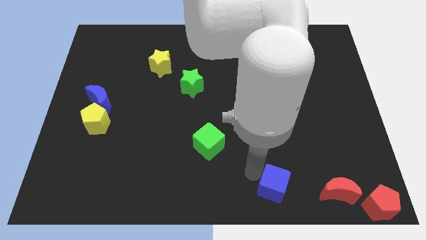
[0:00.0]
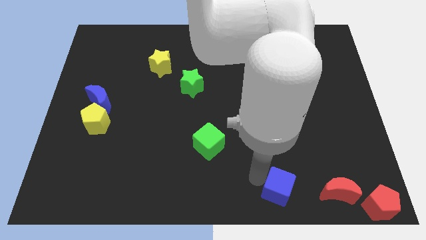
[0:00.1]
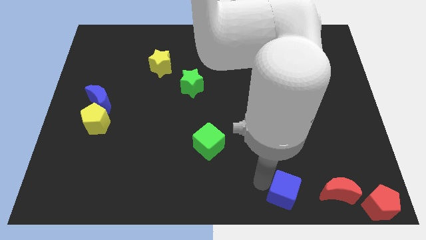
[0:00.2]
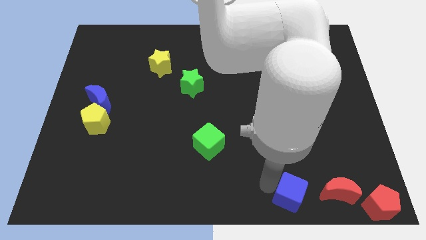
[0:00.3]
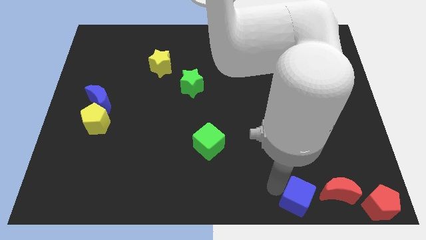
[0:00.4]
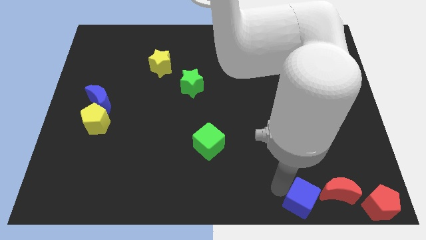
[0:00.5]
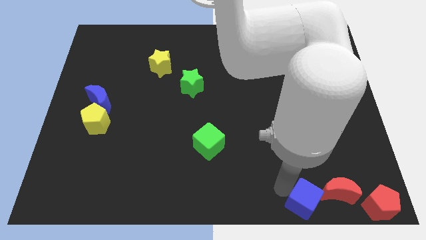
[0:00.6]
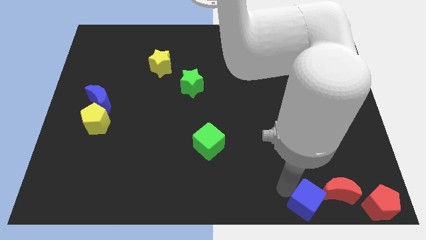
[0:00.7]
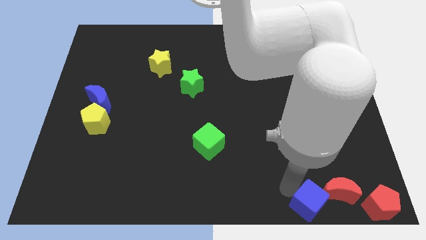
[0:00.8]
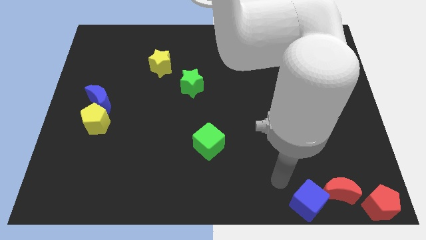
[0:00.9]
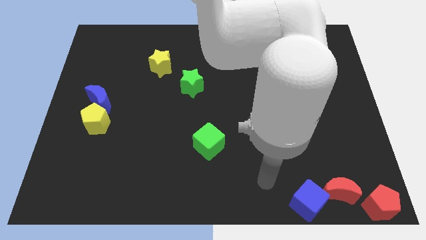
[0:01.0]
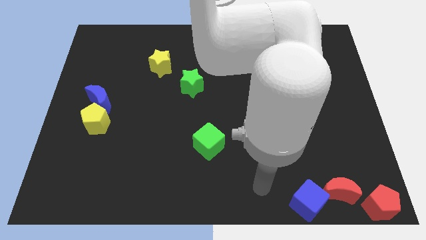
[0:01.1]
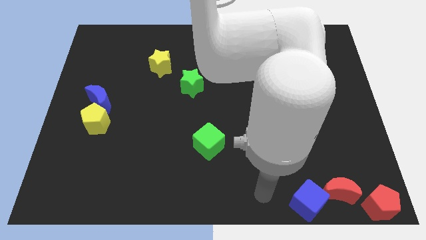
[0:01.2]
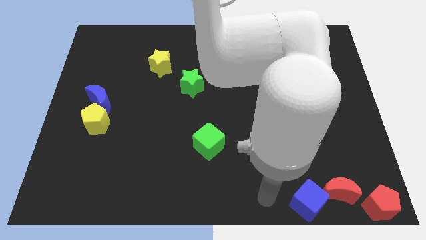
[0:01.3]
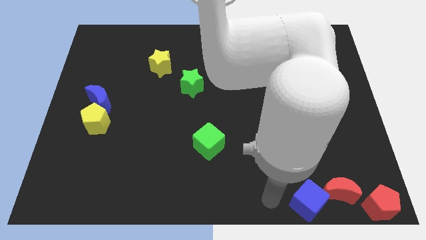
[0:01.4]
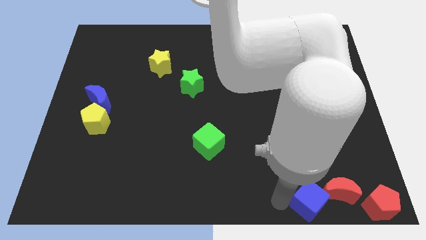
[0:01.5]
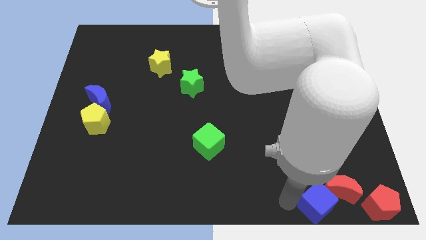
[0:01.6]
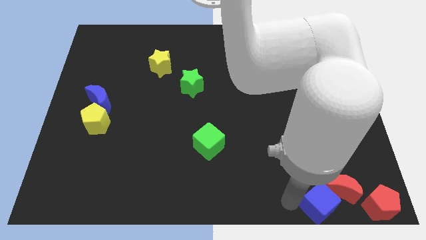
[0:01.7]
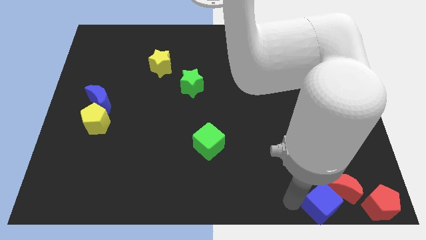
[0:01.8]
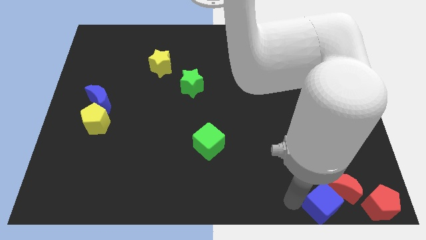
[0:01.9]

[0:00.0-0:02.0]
push the blue cube into the red moon

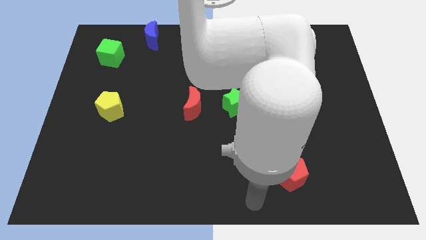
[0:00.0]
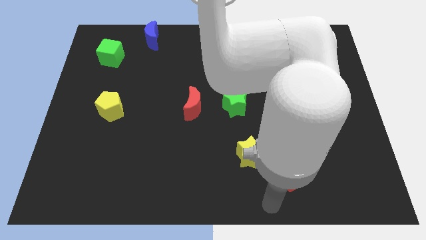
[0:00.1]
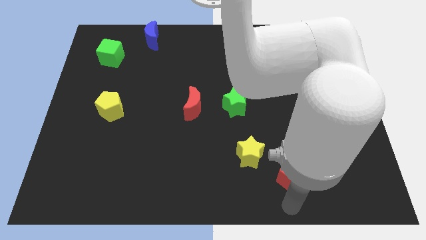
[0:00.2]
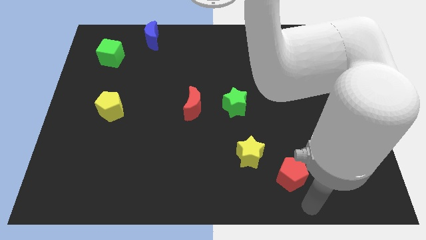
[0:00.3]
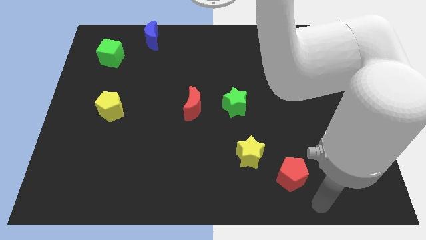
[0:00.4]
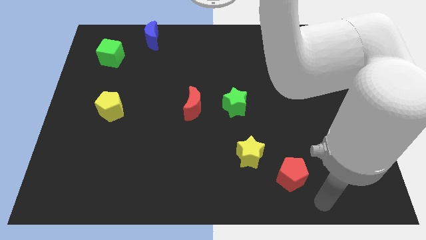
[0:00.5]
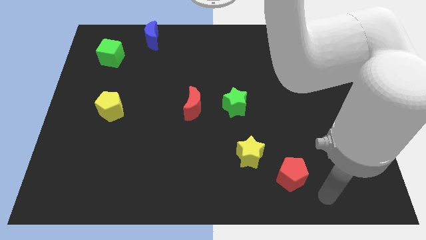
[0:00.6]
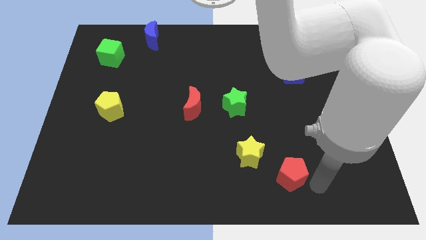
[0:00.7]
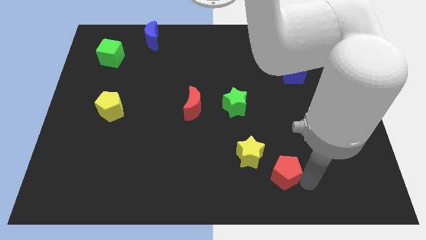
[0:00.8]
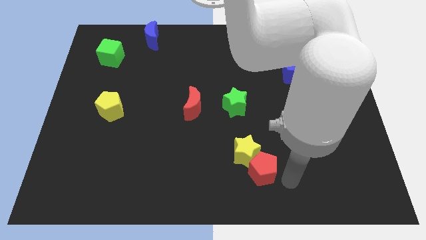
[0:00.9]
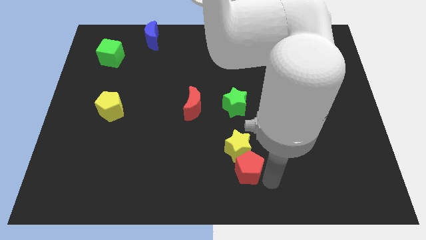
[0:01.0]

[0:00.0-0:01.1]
move the red pentagon vertically below the yellow star

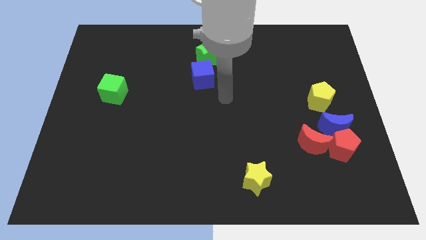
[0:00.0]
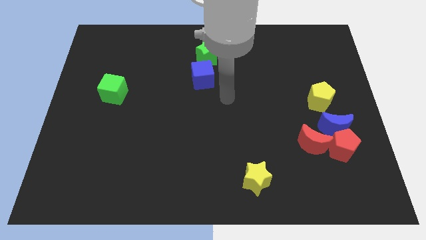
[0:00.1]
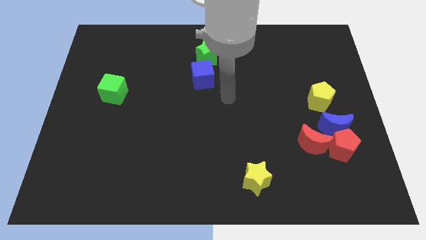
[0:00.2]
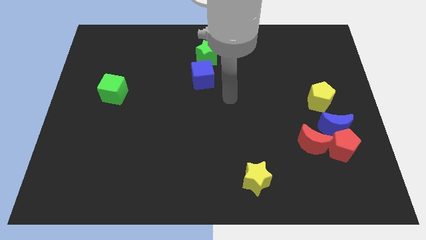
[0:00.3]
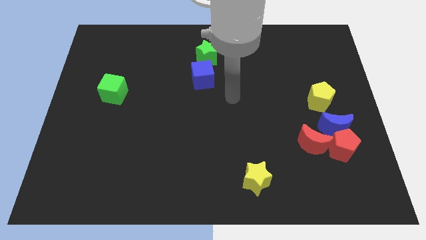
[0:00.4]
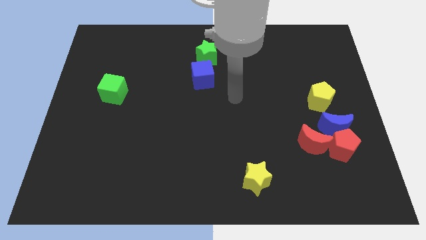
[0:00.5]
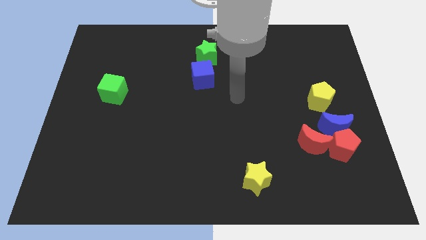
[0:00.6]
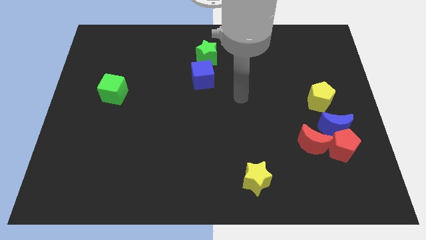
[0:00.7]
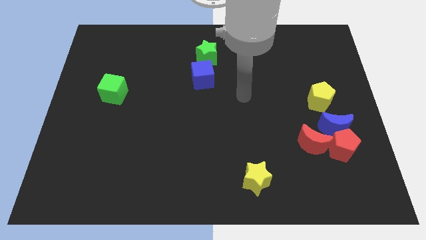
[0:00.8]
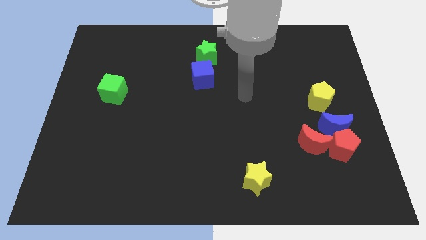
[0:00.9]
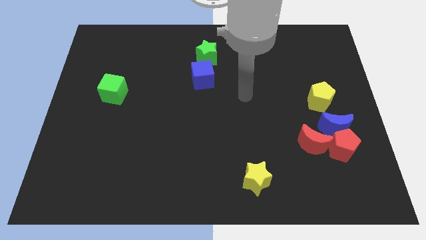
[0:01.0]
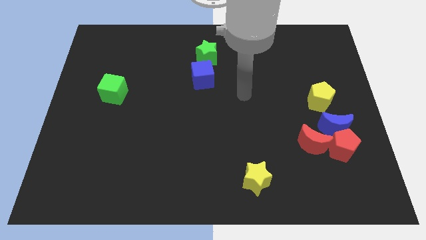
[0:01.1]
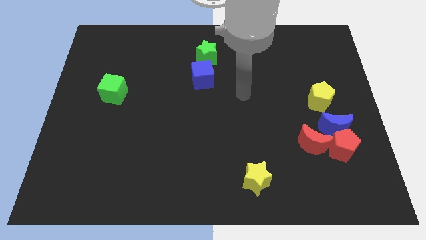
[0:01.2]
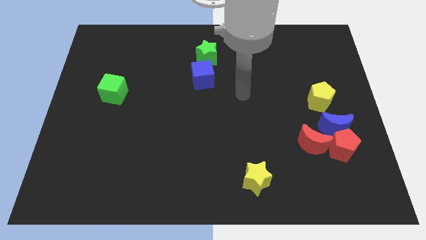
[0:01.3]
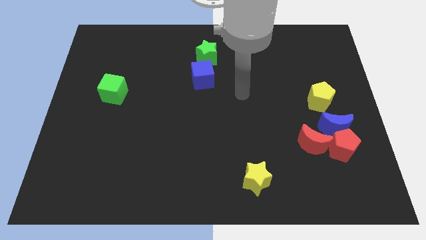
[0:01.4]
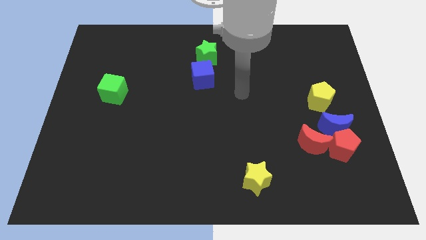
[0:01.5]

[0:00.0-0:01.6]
push your hand in between the blue cube and yellow pentagon

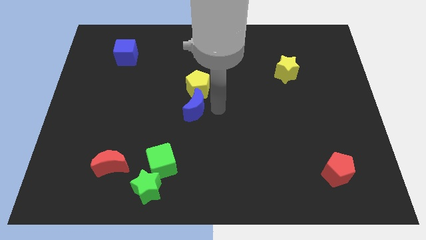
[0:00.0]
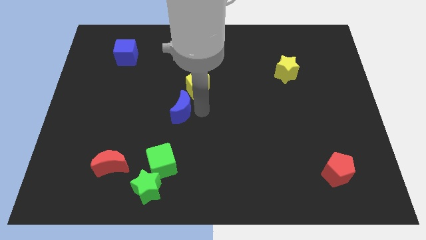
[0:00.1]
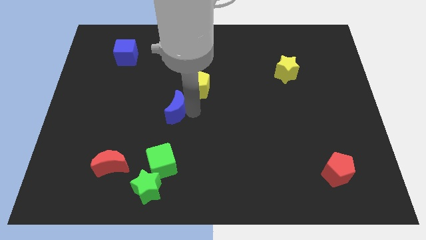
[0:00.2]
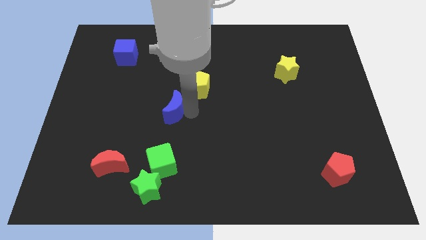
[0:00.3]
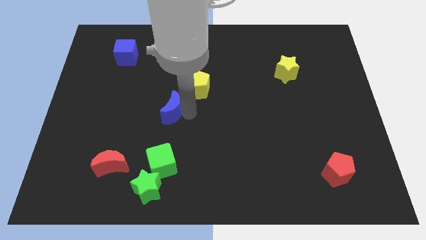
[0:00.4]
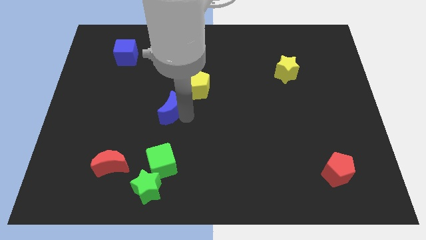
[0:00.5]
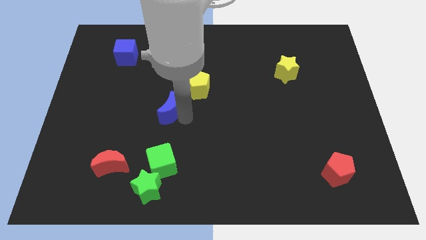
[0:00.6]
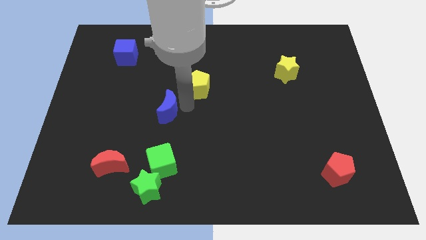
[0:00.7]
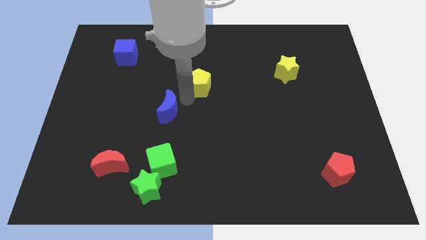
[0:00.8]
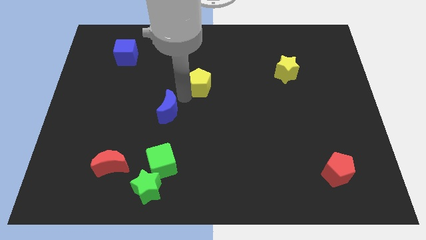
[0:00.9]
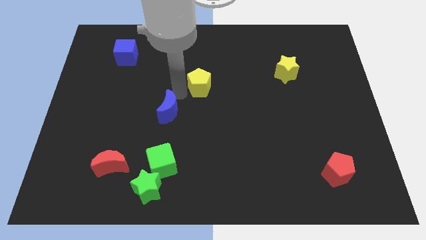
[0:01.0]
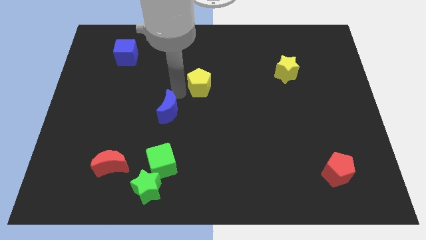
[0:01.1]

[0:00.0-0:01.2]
separate the blue crescent and the yellow pentagon

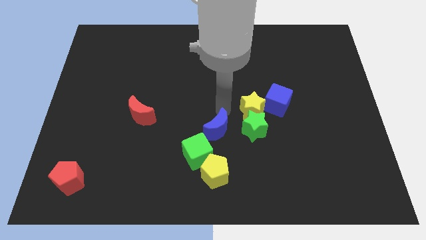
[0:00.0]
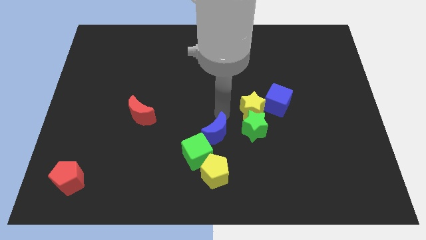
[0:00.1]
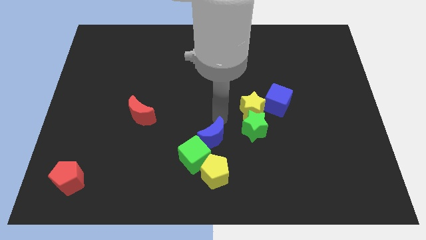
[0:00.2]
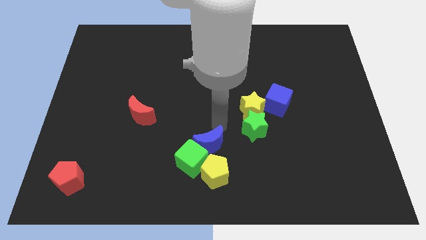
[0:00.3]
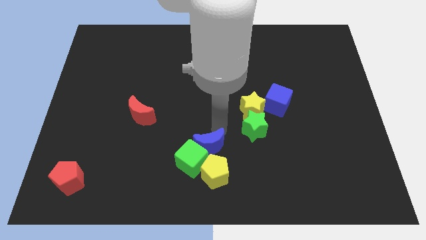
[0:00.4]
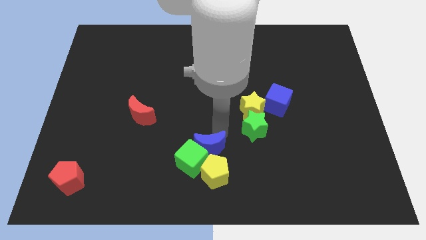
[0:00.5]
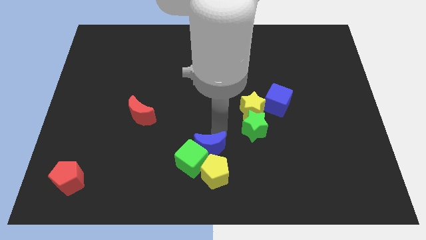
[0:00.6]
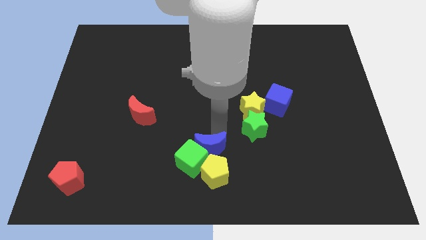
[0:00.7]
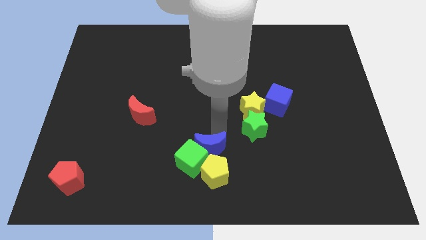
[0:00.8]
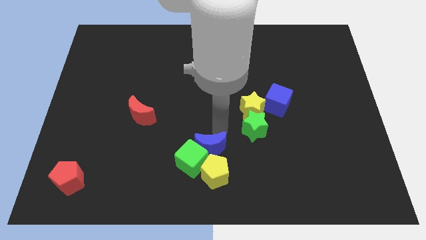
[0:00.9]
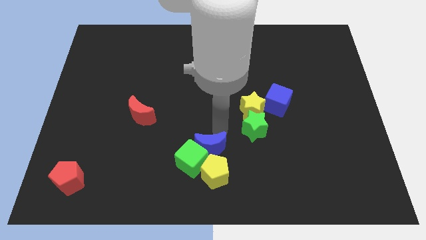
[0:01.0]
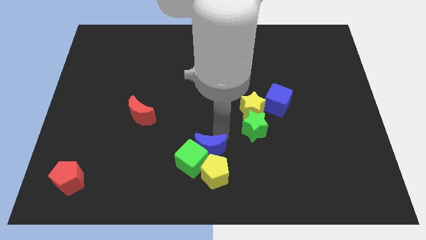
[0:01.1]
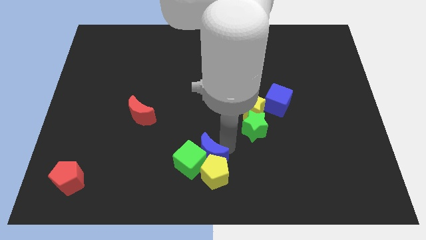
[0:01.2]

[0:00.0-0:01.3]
push blue crescent towards the green cube

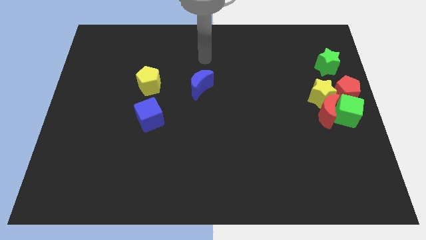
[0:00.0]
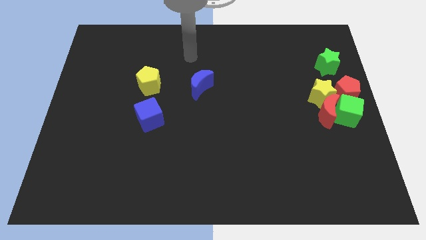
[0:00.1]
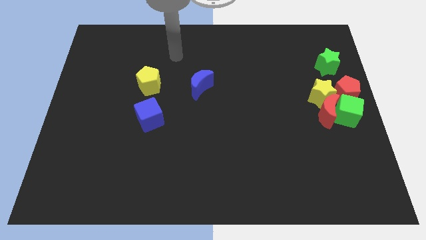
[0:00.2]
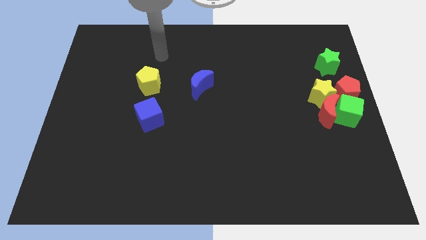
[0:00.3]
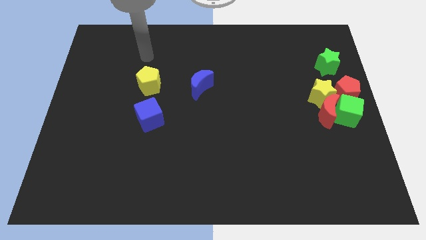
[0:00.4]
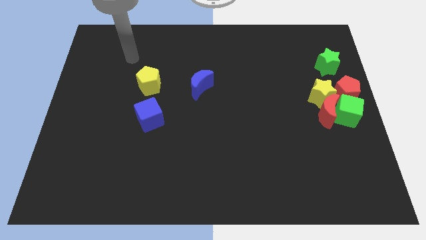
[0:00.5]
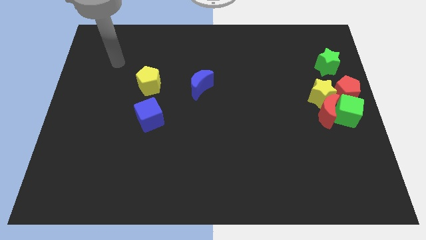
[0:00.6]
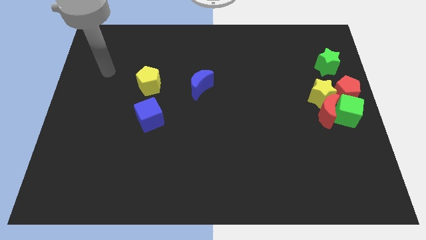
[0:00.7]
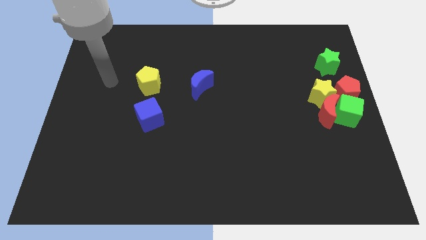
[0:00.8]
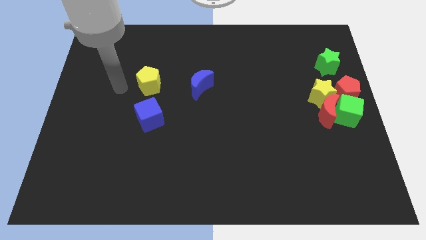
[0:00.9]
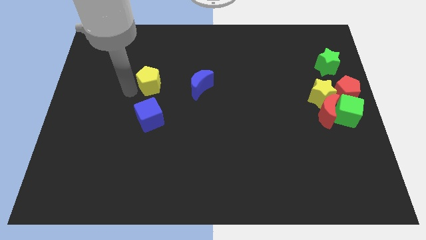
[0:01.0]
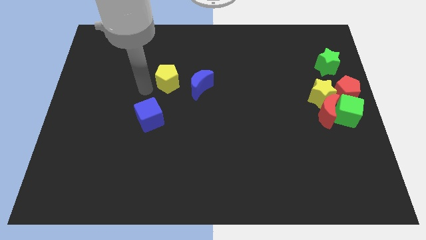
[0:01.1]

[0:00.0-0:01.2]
move arm towards the left of the board
